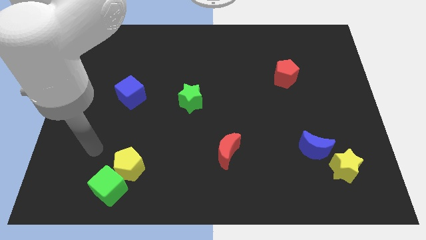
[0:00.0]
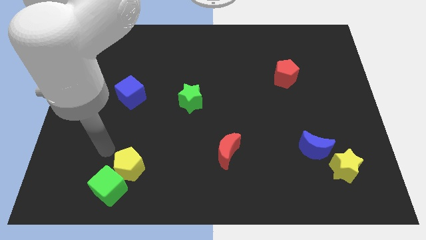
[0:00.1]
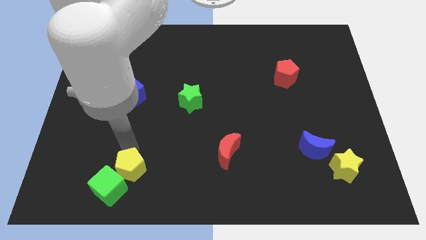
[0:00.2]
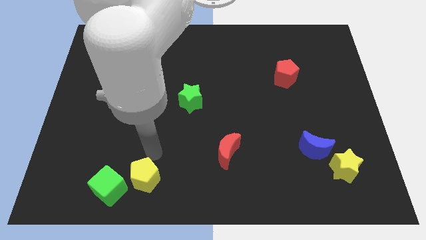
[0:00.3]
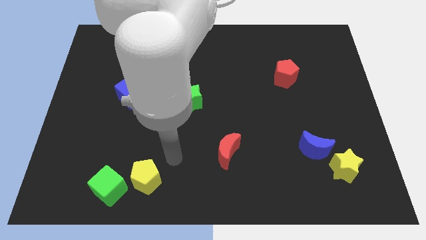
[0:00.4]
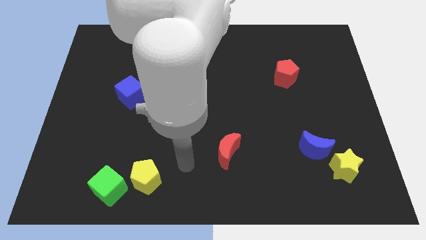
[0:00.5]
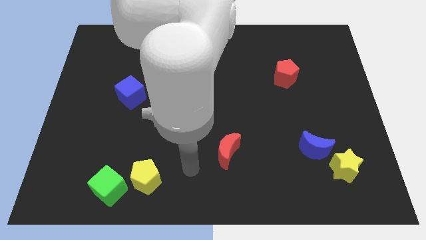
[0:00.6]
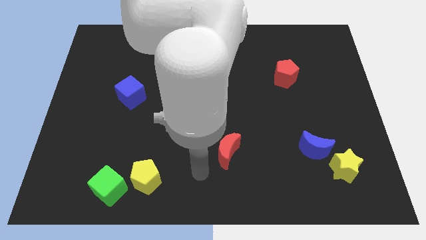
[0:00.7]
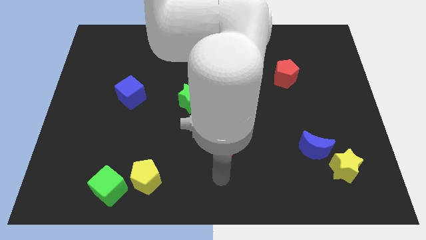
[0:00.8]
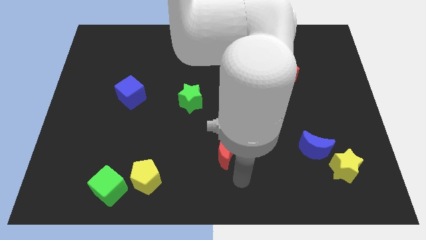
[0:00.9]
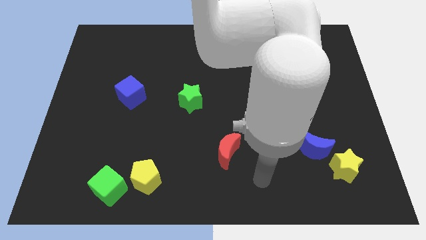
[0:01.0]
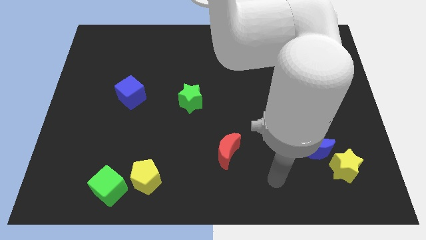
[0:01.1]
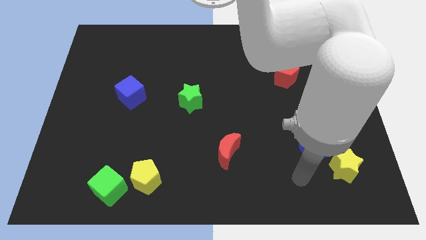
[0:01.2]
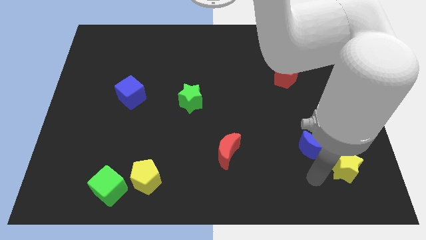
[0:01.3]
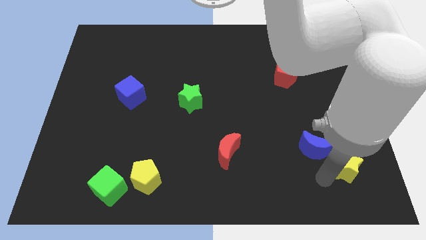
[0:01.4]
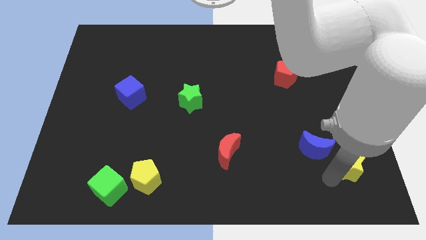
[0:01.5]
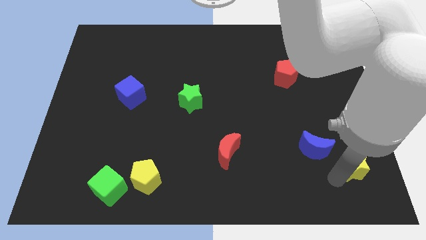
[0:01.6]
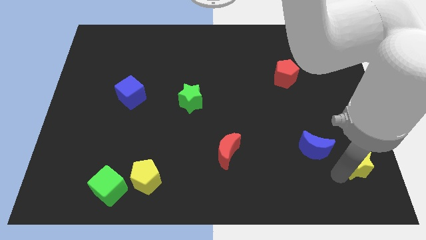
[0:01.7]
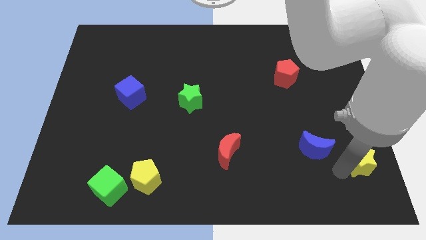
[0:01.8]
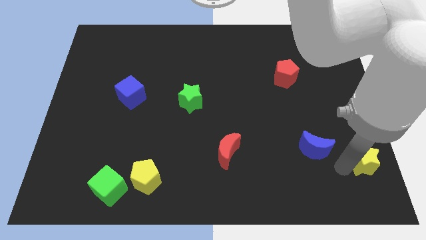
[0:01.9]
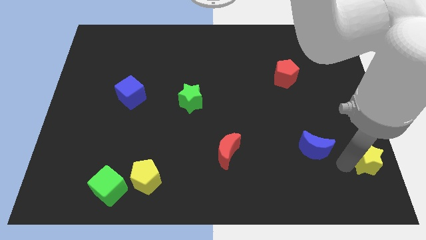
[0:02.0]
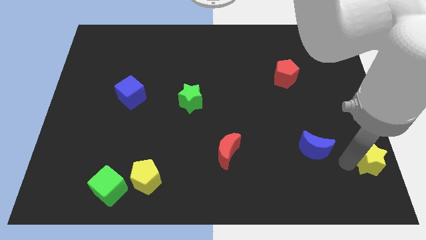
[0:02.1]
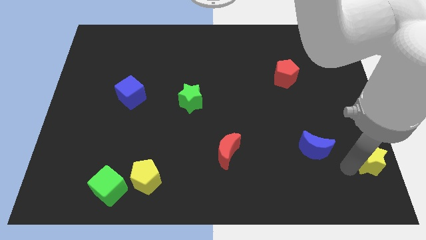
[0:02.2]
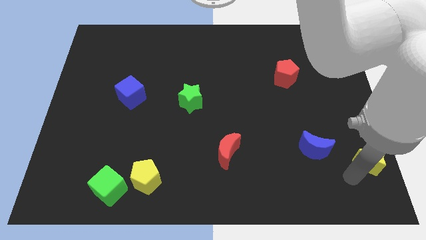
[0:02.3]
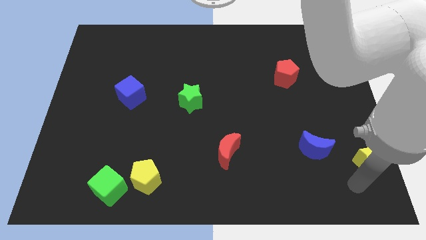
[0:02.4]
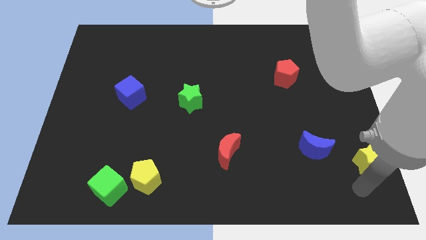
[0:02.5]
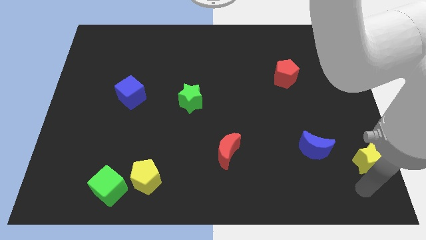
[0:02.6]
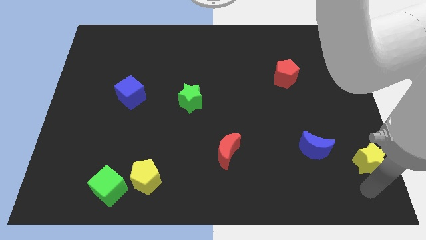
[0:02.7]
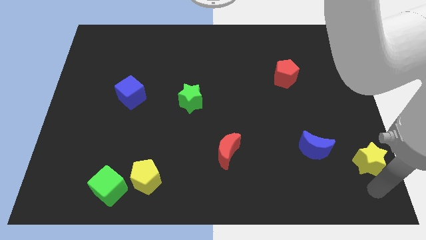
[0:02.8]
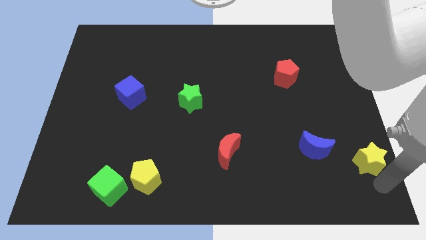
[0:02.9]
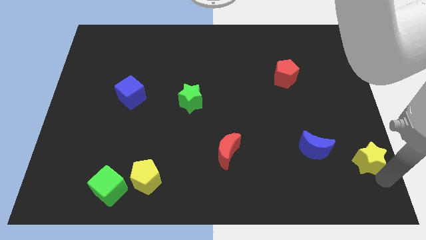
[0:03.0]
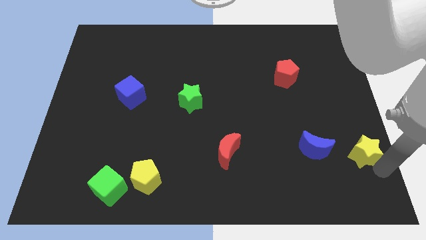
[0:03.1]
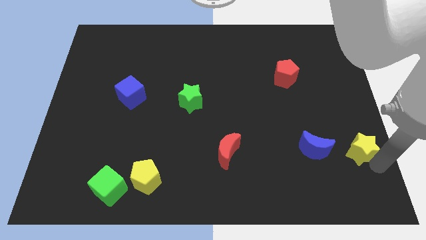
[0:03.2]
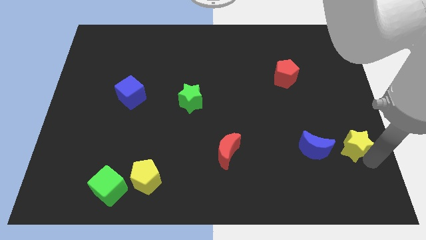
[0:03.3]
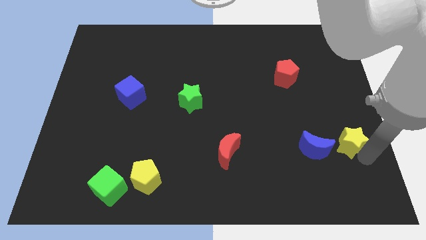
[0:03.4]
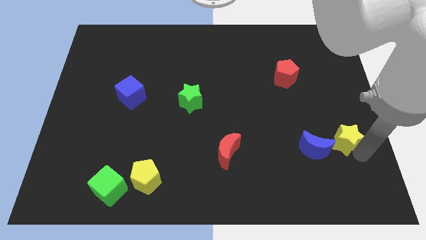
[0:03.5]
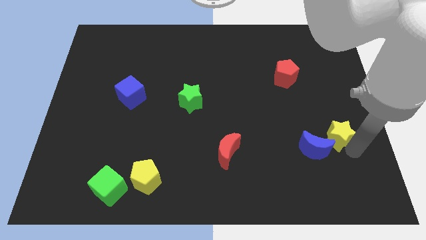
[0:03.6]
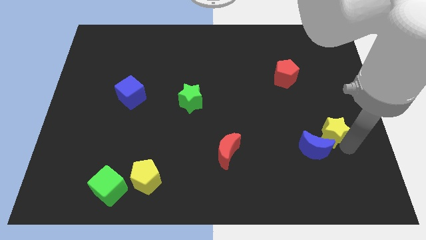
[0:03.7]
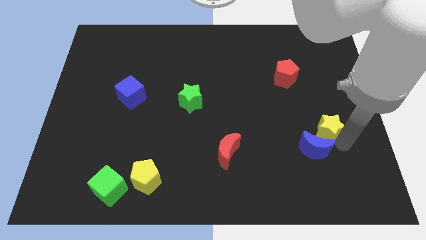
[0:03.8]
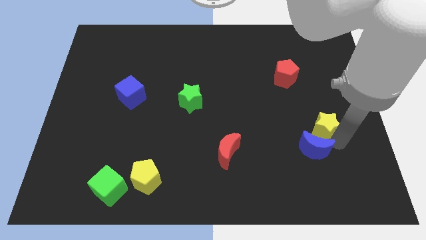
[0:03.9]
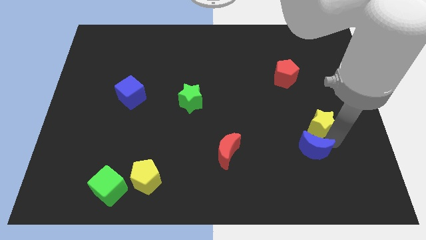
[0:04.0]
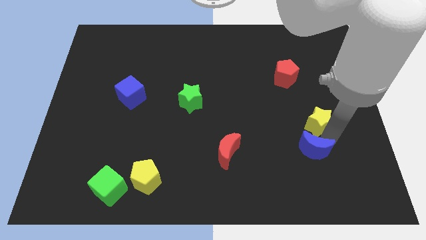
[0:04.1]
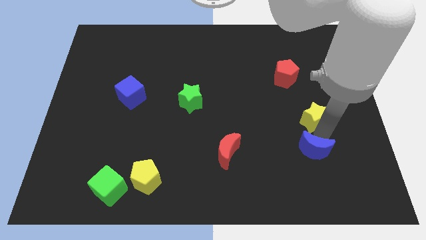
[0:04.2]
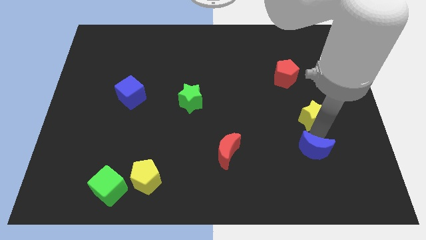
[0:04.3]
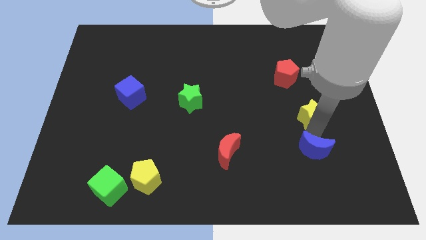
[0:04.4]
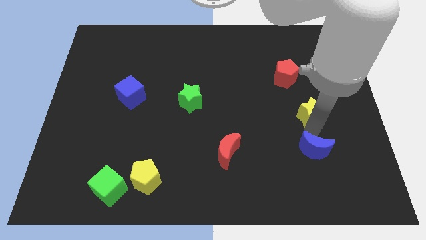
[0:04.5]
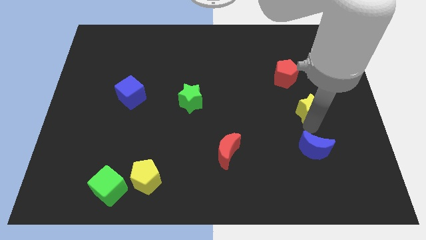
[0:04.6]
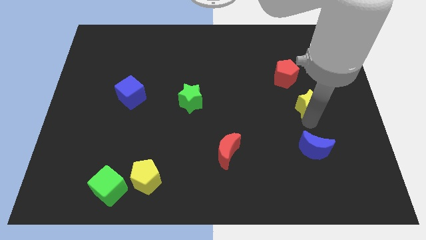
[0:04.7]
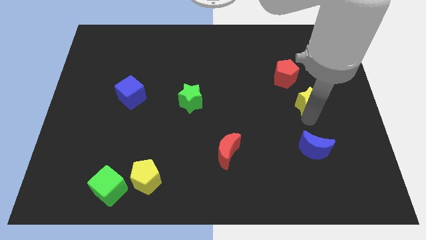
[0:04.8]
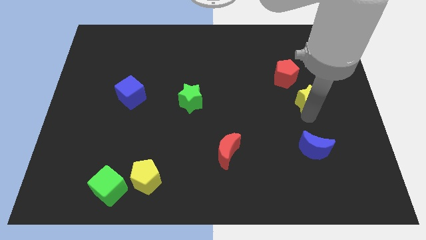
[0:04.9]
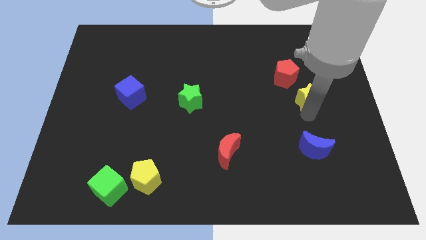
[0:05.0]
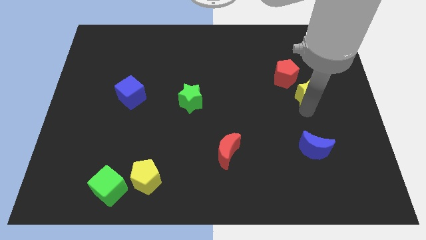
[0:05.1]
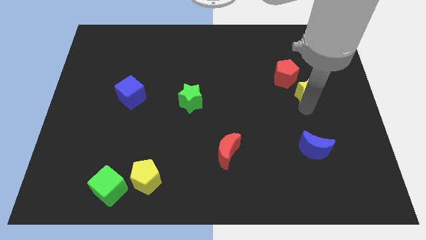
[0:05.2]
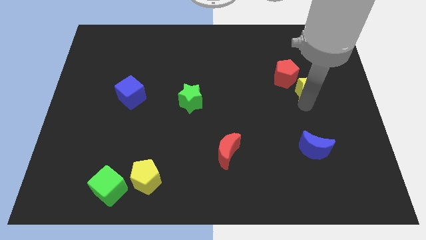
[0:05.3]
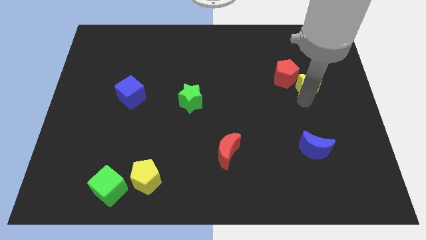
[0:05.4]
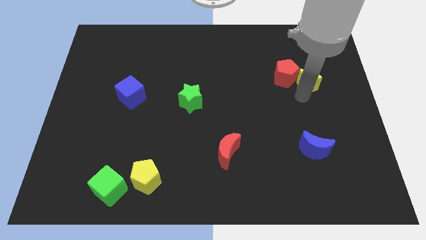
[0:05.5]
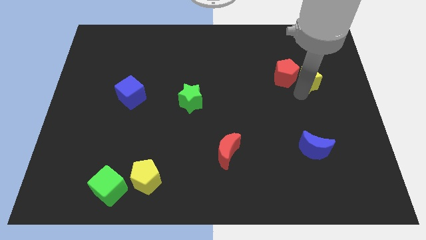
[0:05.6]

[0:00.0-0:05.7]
put the yellow star to the red pentagon

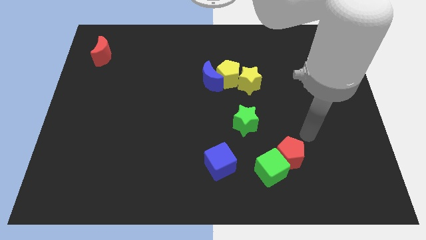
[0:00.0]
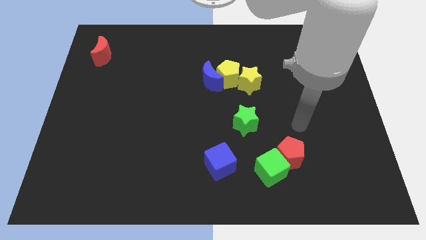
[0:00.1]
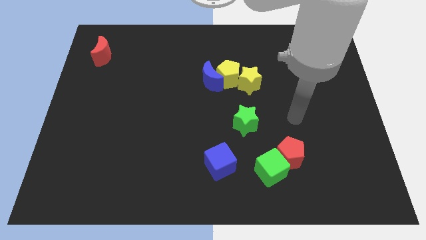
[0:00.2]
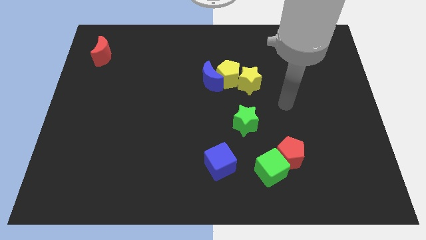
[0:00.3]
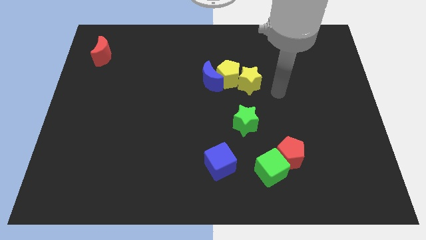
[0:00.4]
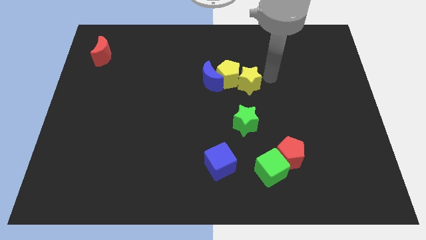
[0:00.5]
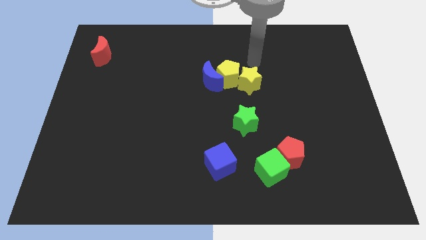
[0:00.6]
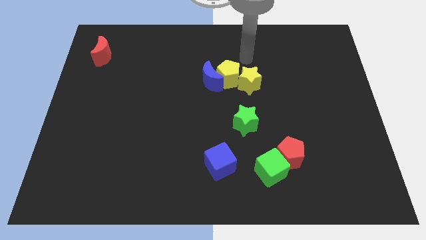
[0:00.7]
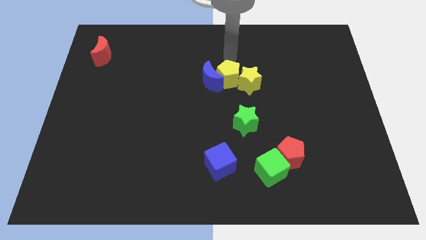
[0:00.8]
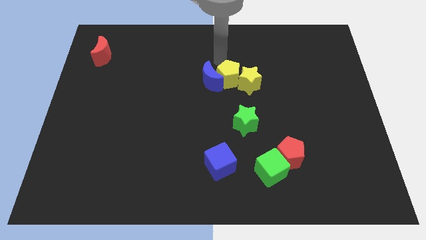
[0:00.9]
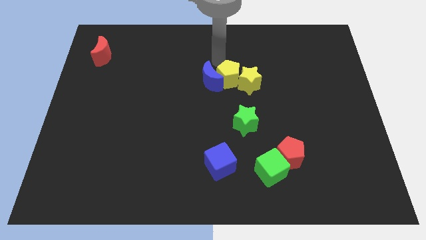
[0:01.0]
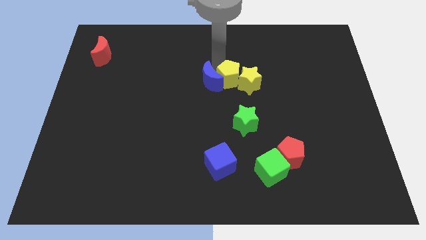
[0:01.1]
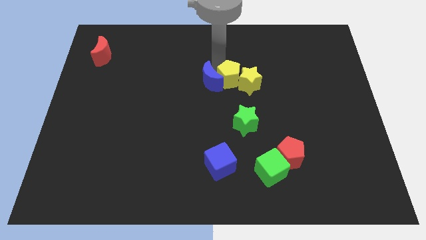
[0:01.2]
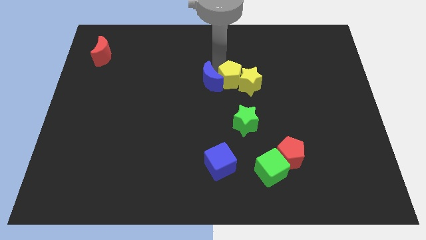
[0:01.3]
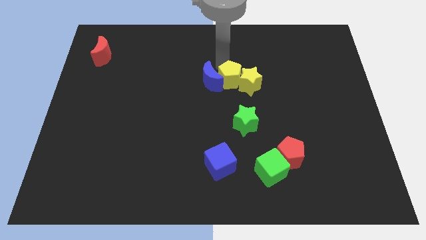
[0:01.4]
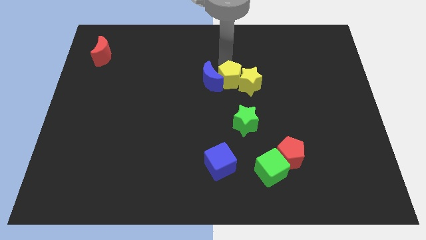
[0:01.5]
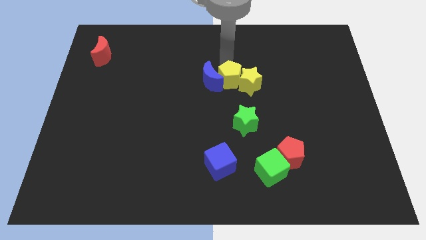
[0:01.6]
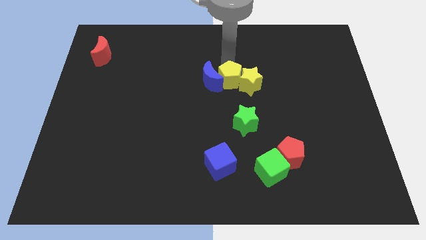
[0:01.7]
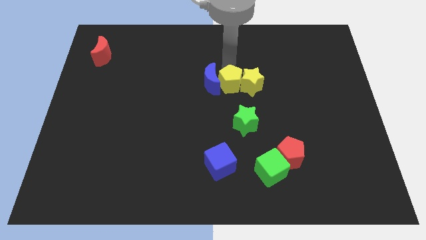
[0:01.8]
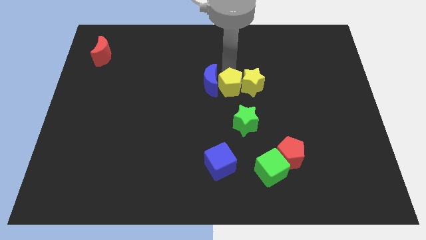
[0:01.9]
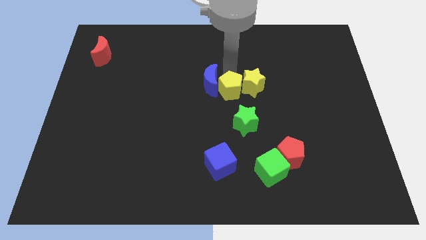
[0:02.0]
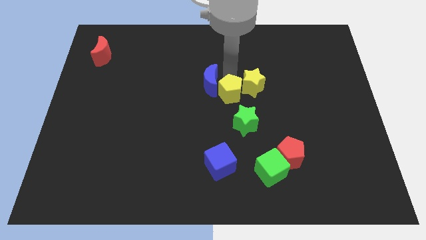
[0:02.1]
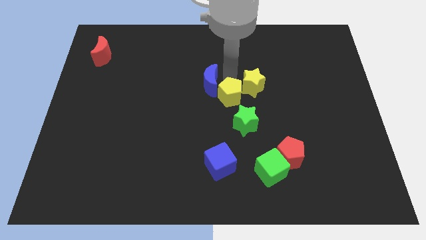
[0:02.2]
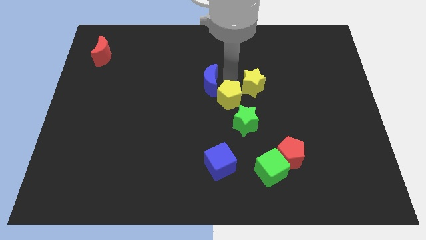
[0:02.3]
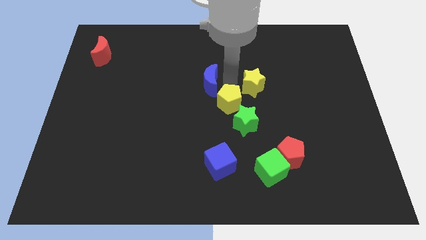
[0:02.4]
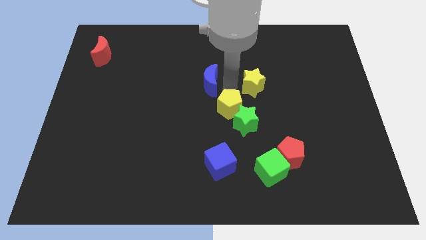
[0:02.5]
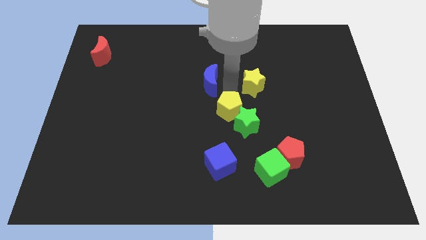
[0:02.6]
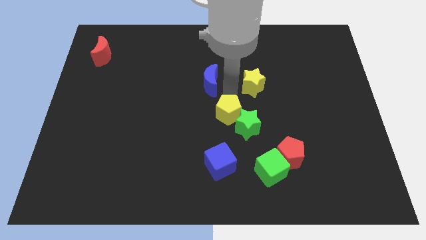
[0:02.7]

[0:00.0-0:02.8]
put the yellow pentagon towards the green star
